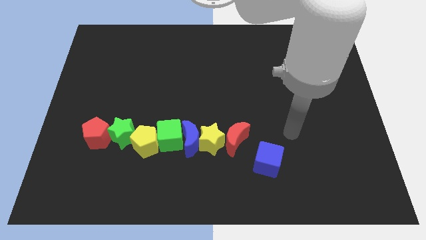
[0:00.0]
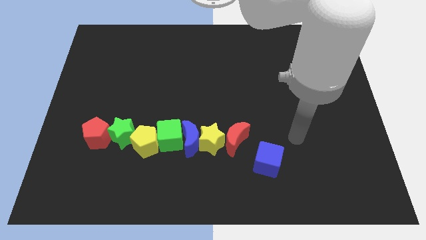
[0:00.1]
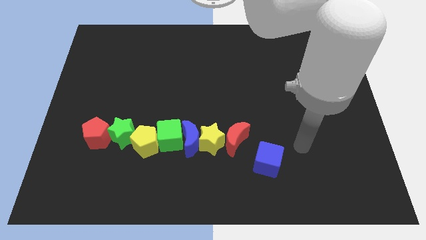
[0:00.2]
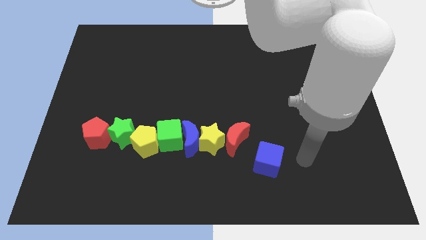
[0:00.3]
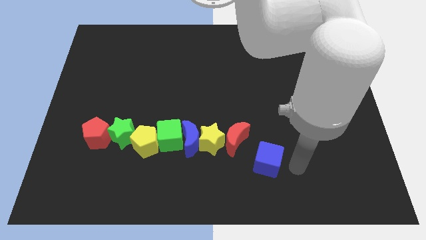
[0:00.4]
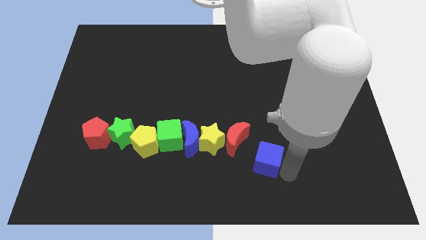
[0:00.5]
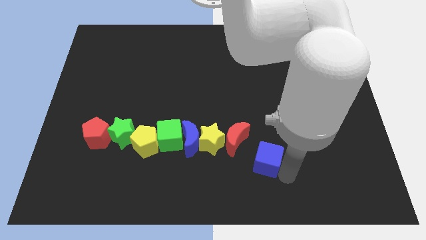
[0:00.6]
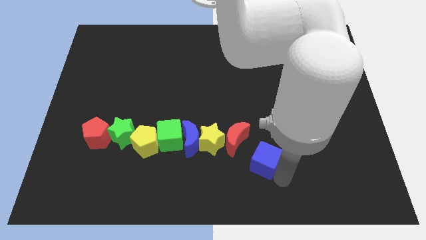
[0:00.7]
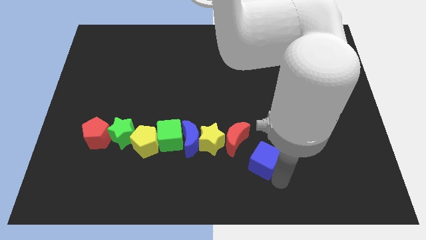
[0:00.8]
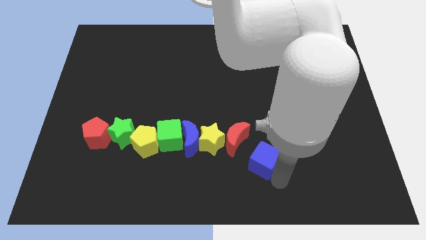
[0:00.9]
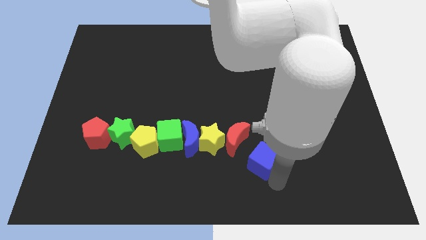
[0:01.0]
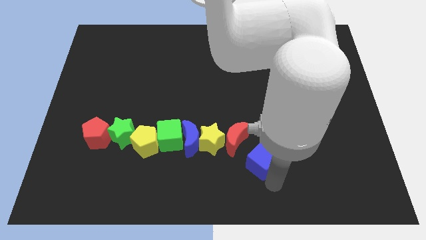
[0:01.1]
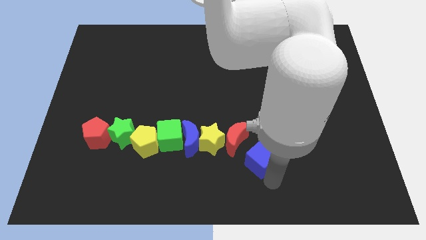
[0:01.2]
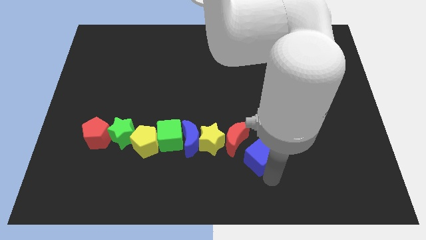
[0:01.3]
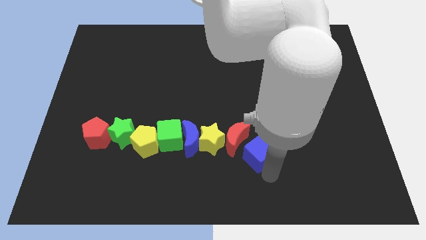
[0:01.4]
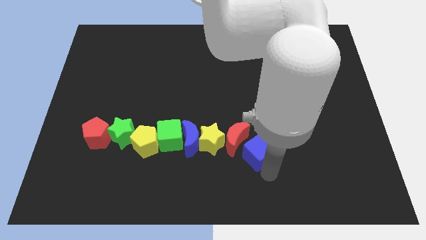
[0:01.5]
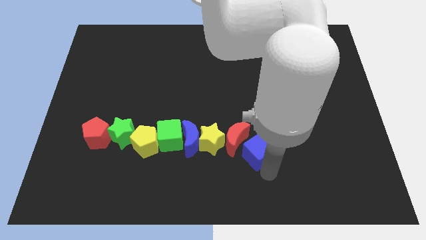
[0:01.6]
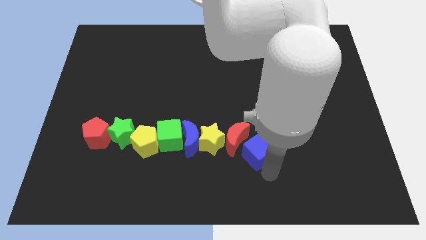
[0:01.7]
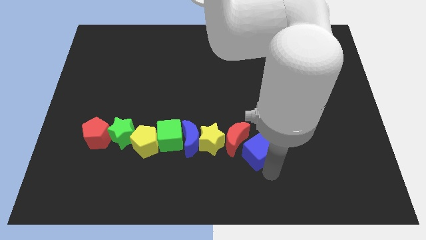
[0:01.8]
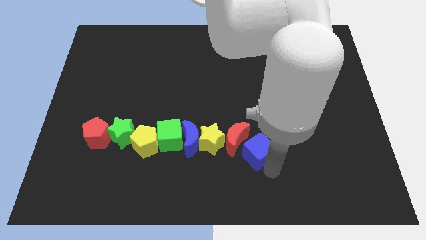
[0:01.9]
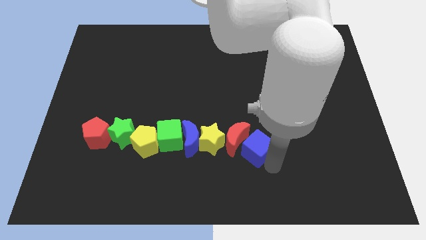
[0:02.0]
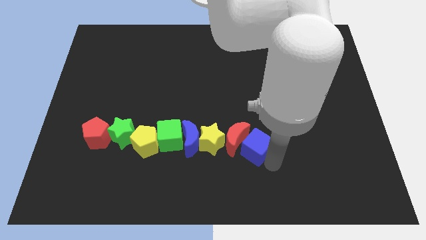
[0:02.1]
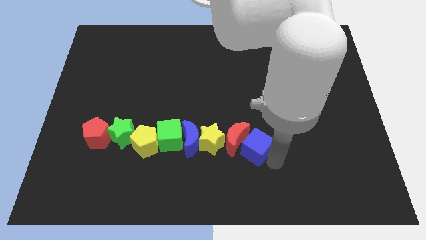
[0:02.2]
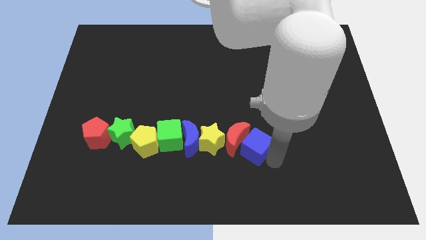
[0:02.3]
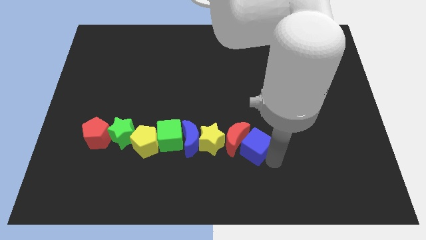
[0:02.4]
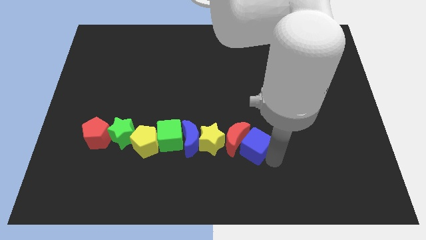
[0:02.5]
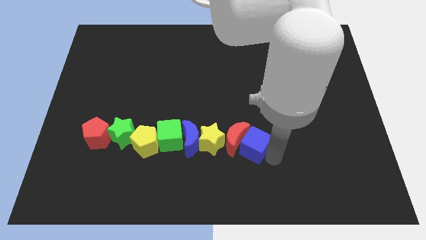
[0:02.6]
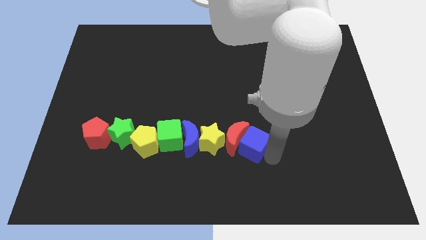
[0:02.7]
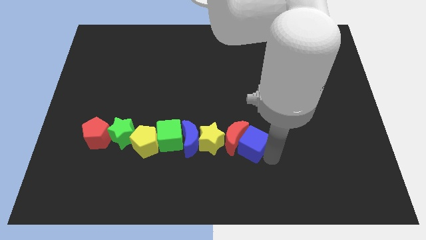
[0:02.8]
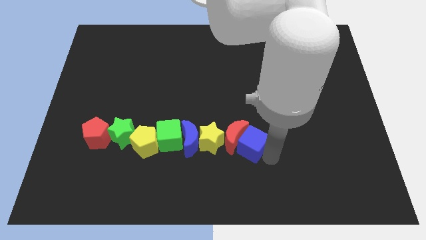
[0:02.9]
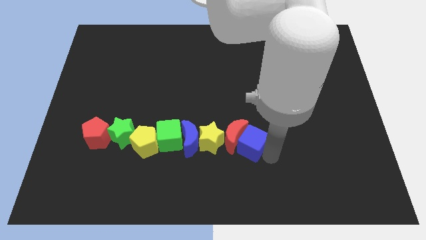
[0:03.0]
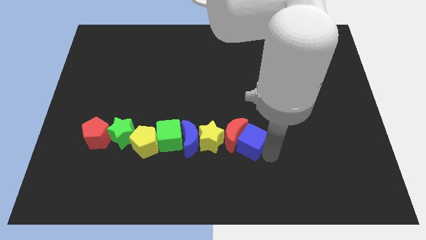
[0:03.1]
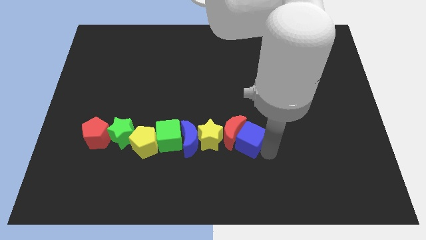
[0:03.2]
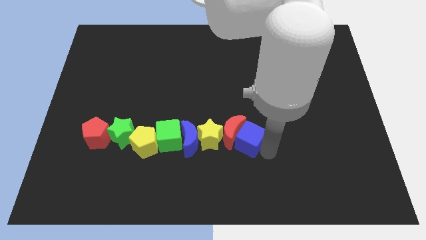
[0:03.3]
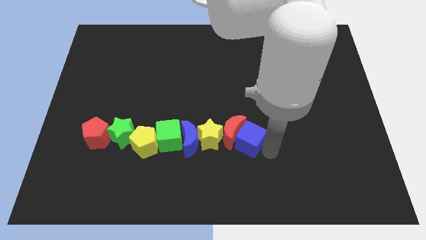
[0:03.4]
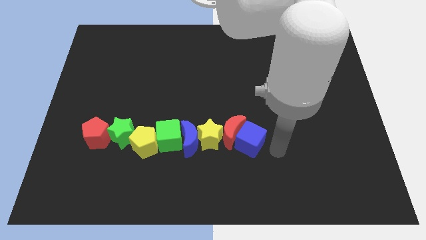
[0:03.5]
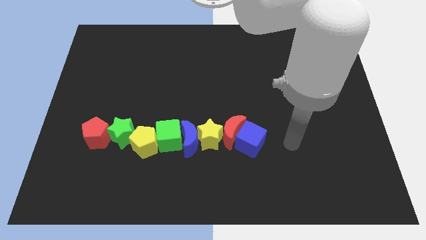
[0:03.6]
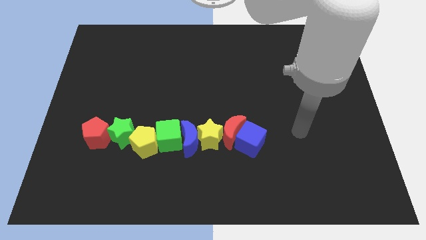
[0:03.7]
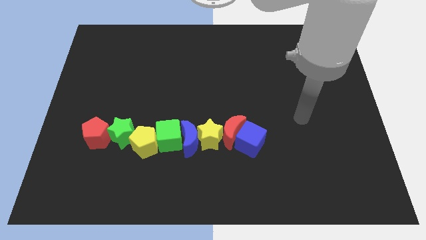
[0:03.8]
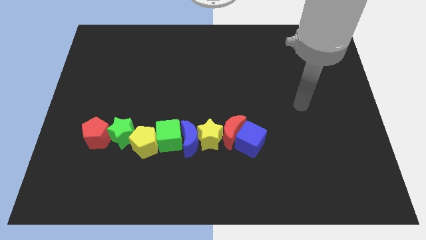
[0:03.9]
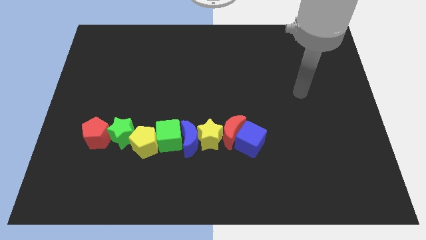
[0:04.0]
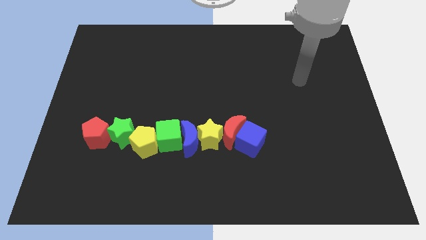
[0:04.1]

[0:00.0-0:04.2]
push the blue cube to the right of red moon

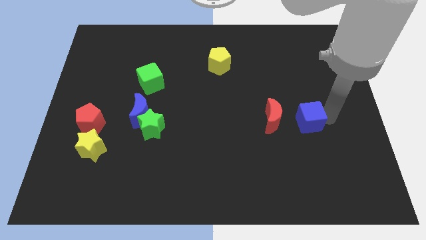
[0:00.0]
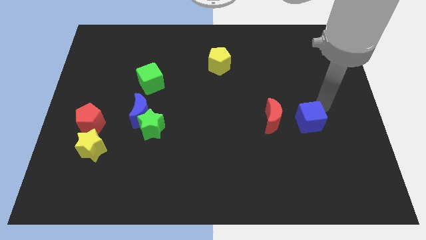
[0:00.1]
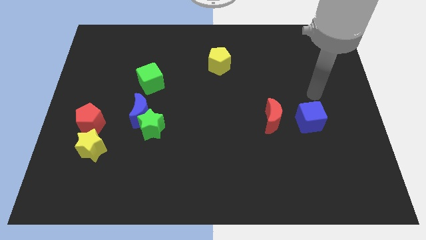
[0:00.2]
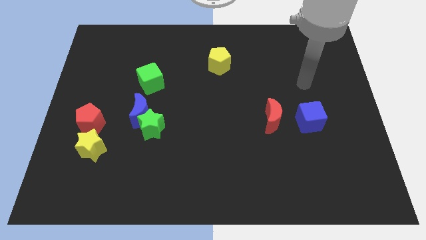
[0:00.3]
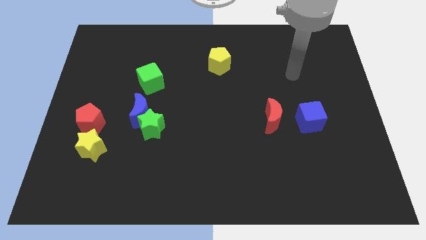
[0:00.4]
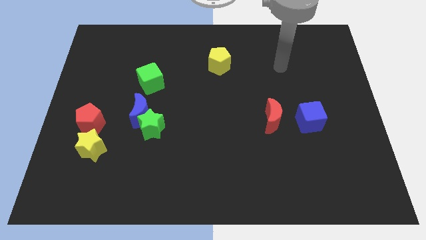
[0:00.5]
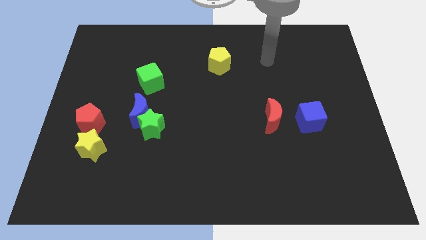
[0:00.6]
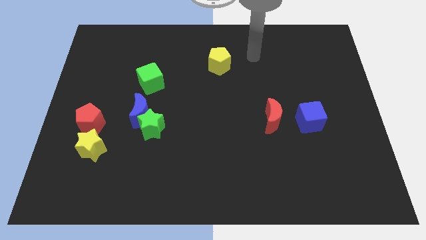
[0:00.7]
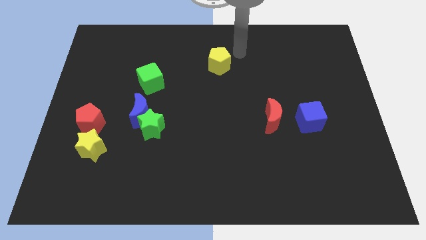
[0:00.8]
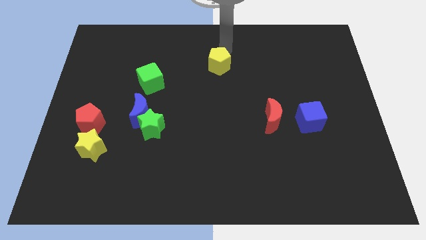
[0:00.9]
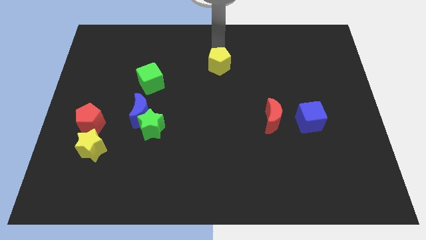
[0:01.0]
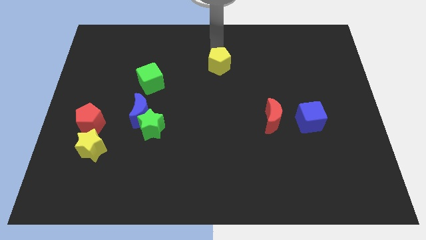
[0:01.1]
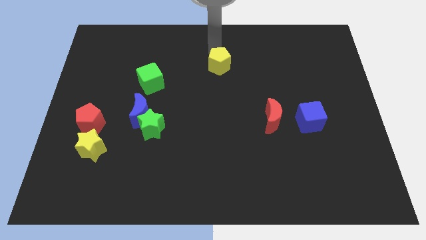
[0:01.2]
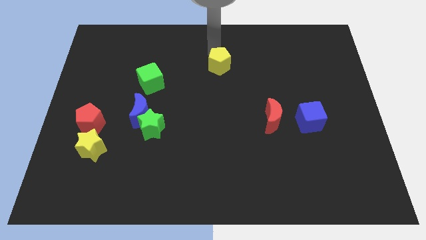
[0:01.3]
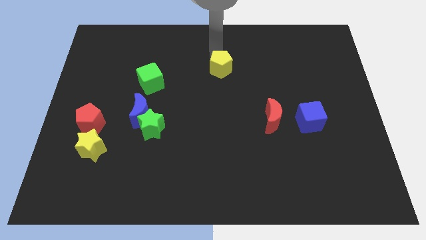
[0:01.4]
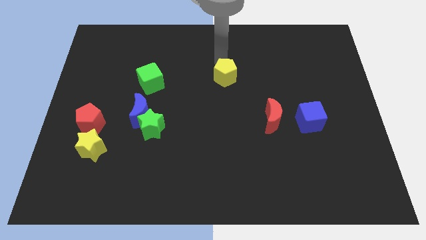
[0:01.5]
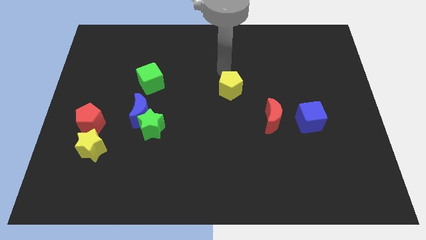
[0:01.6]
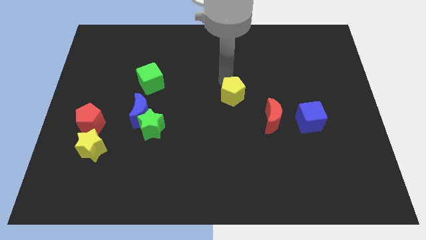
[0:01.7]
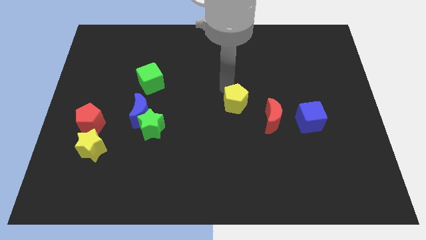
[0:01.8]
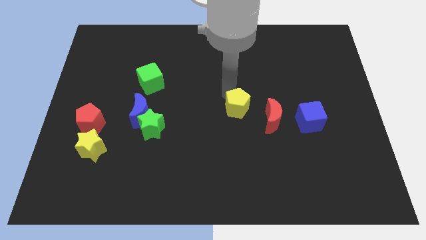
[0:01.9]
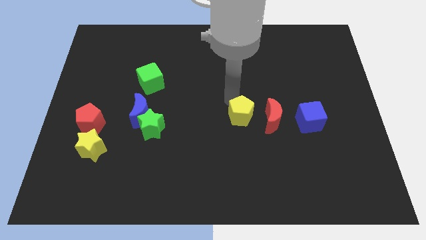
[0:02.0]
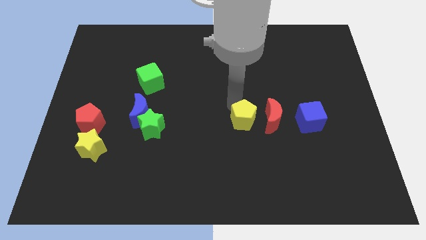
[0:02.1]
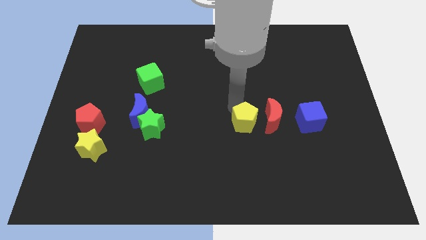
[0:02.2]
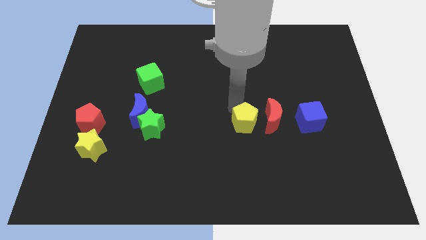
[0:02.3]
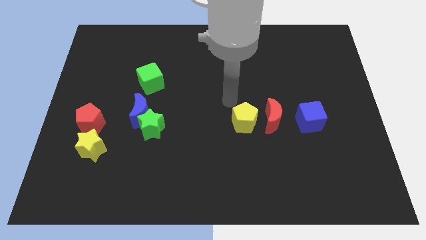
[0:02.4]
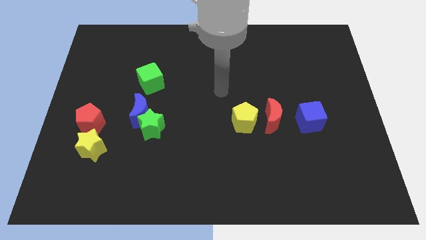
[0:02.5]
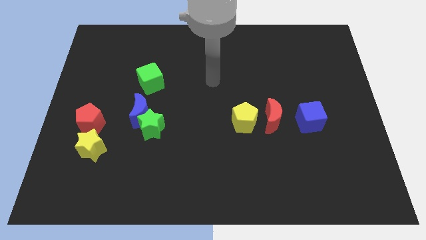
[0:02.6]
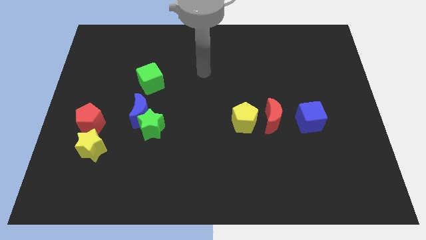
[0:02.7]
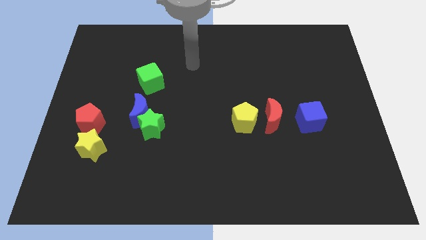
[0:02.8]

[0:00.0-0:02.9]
push the yellow pentagon to the left of the red crescent

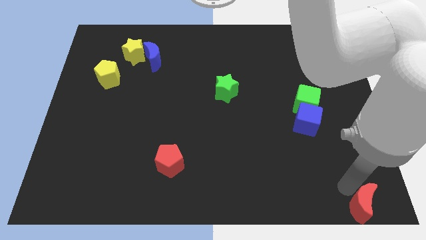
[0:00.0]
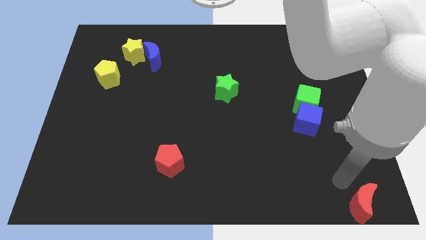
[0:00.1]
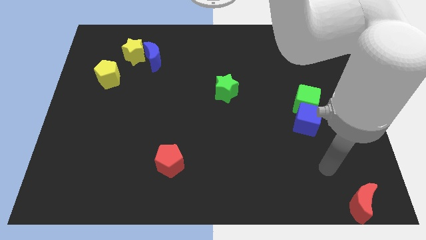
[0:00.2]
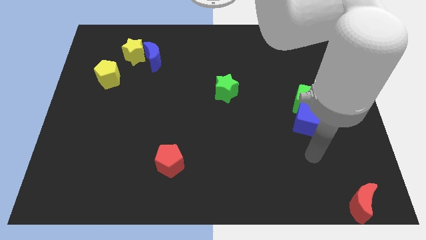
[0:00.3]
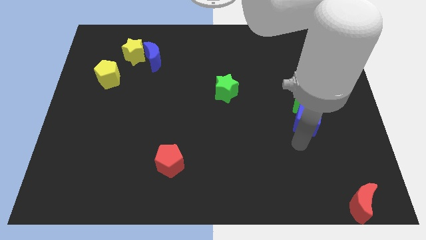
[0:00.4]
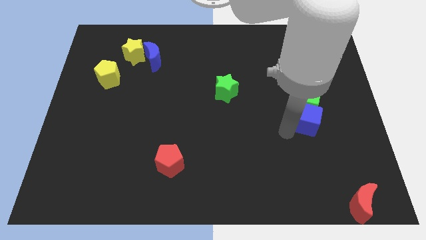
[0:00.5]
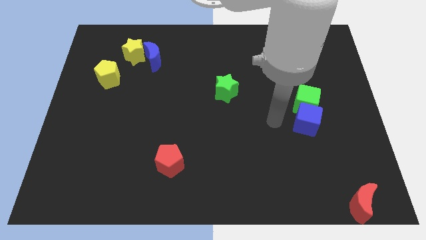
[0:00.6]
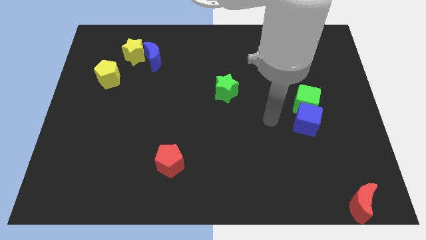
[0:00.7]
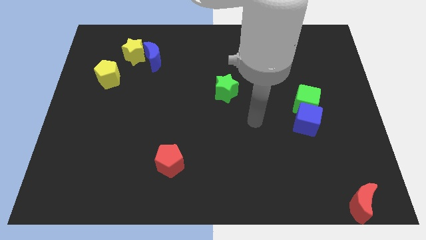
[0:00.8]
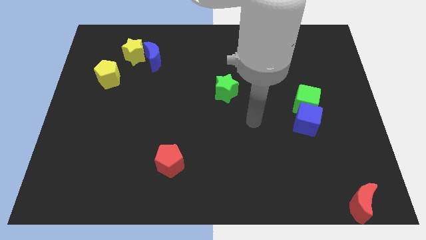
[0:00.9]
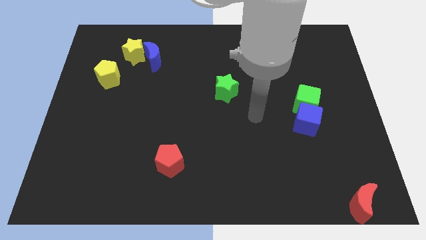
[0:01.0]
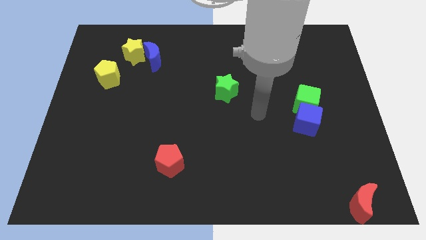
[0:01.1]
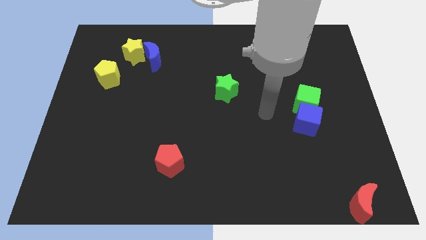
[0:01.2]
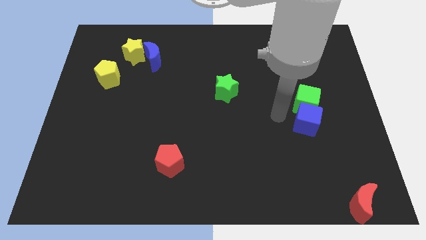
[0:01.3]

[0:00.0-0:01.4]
push the arm in between the green star and the blue cube

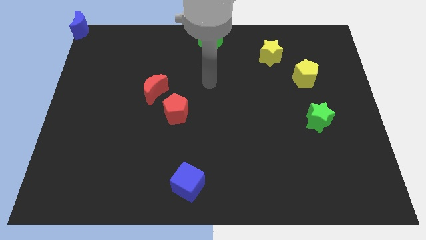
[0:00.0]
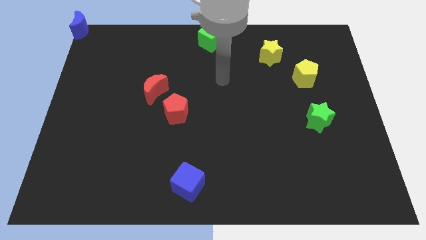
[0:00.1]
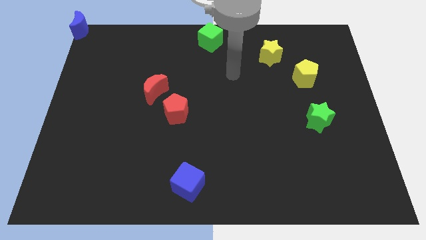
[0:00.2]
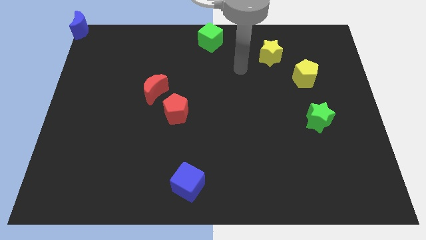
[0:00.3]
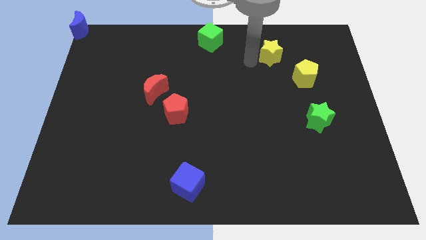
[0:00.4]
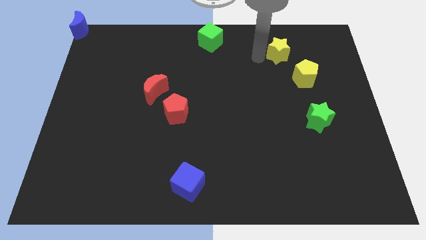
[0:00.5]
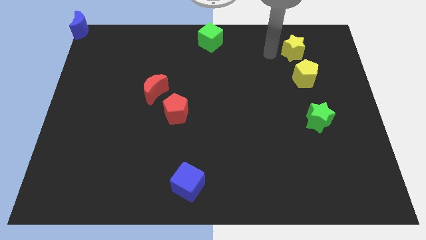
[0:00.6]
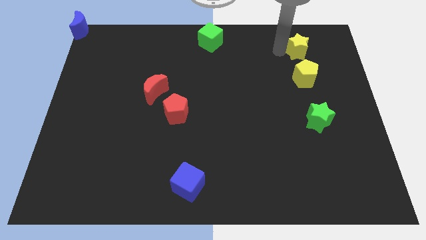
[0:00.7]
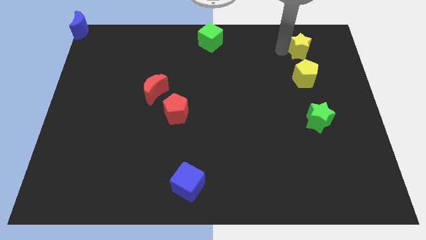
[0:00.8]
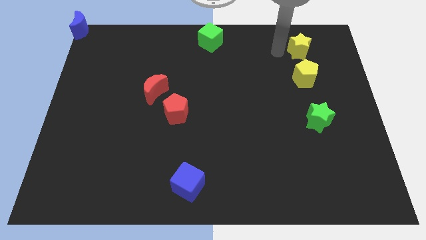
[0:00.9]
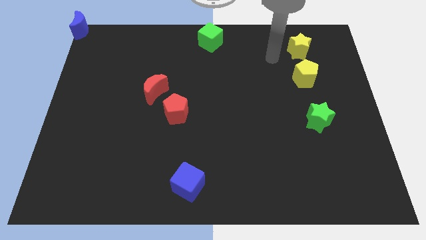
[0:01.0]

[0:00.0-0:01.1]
put the yellow star above the yellow pentagon
